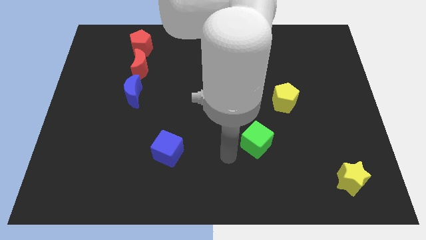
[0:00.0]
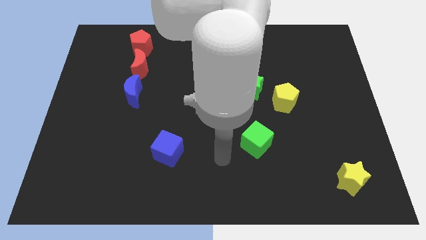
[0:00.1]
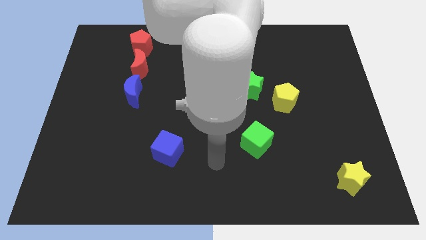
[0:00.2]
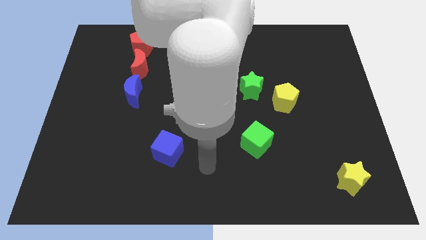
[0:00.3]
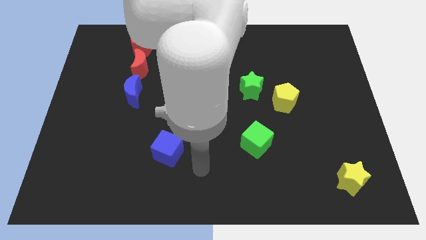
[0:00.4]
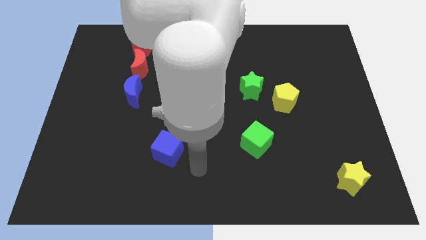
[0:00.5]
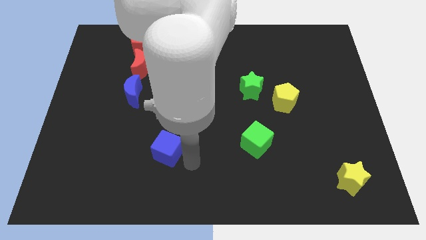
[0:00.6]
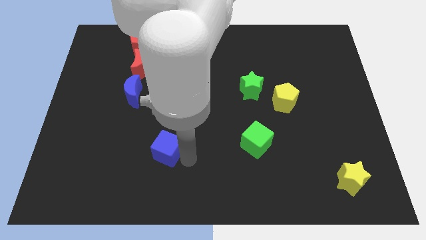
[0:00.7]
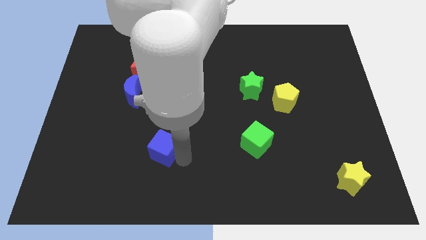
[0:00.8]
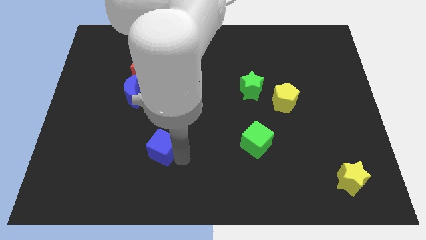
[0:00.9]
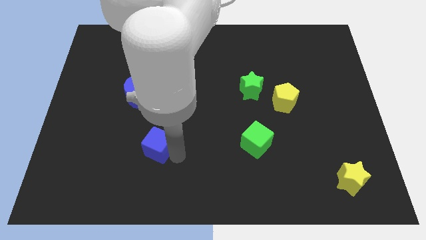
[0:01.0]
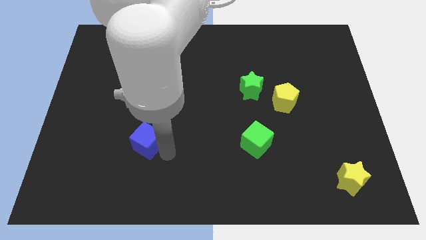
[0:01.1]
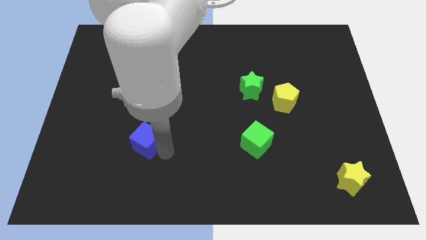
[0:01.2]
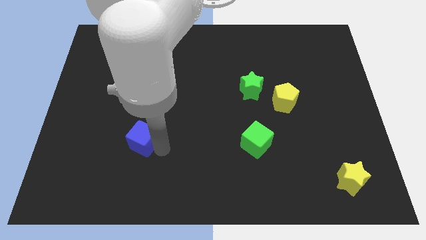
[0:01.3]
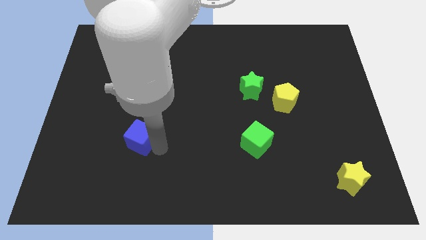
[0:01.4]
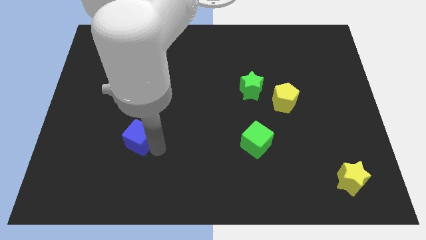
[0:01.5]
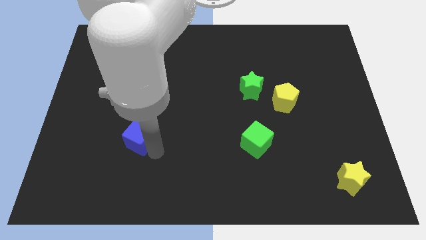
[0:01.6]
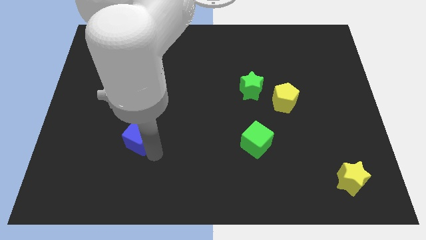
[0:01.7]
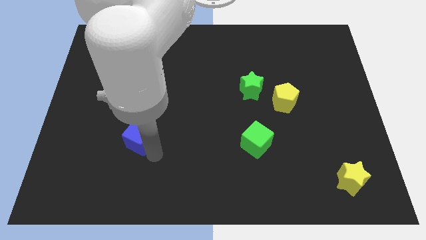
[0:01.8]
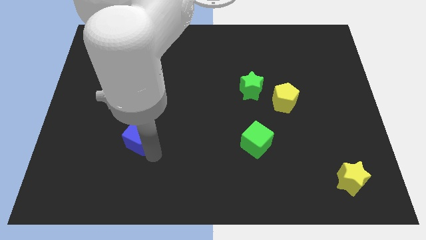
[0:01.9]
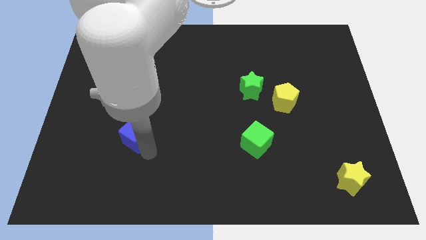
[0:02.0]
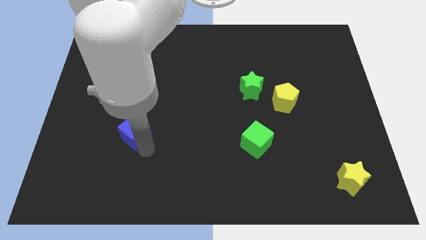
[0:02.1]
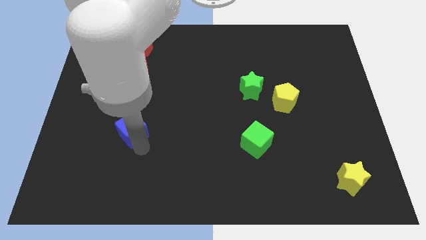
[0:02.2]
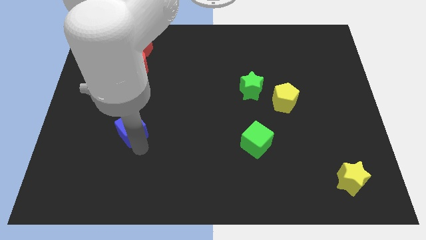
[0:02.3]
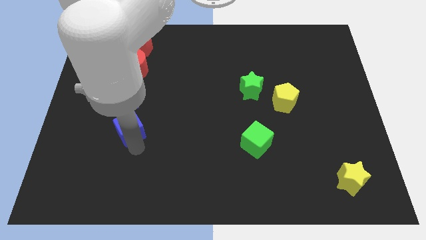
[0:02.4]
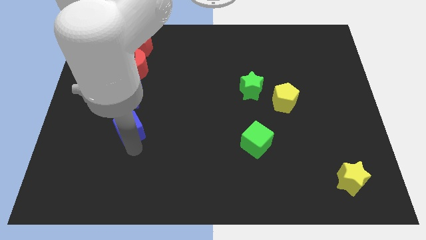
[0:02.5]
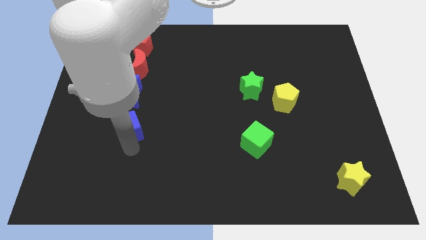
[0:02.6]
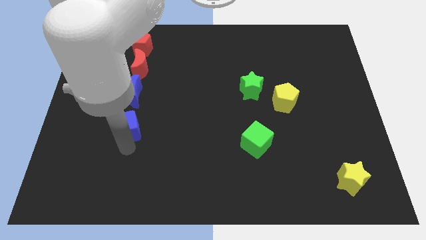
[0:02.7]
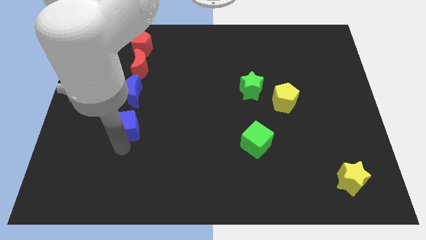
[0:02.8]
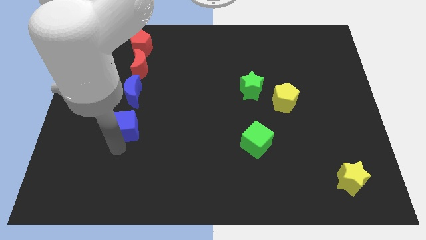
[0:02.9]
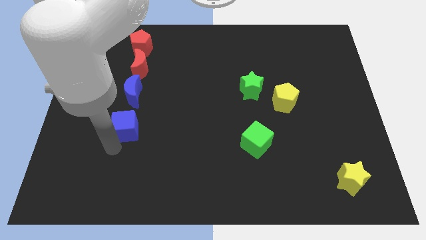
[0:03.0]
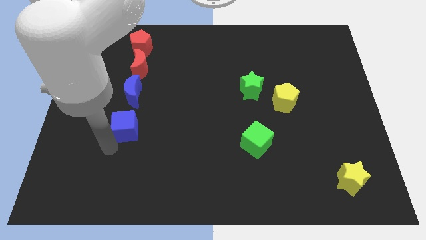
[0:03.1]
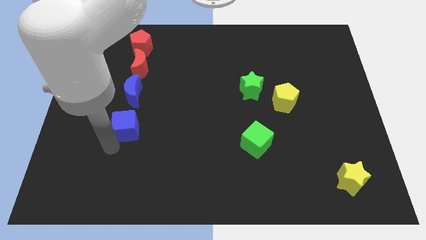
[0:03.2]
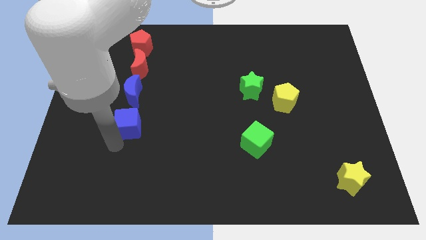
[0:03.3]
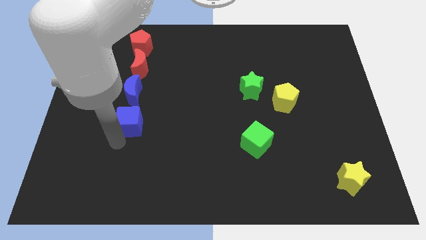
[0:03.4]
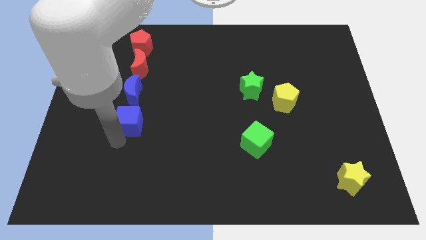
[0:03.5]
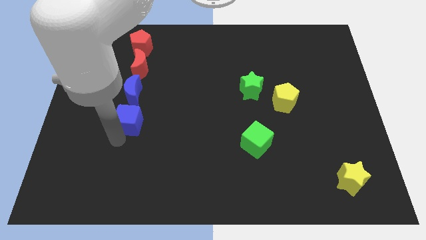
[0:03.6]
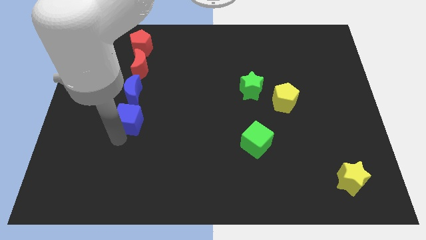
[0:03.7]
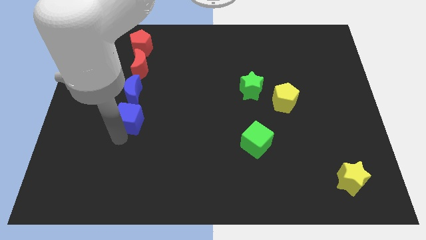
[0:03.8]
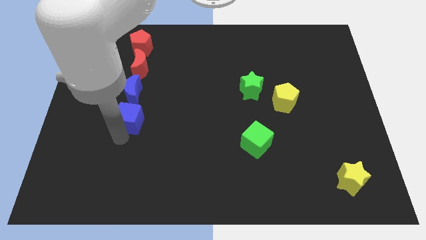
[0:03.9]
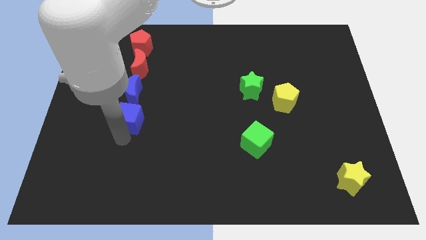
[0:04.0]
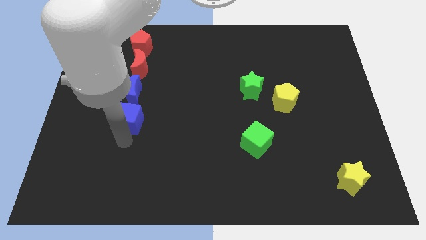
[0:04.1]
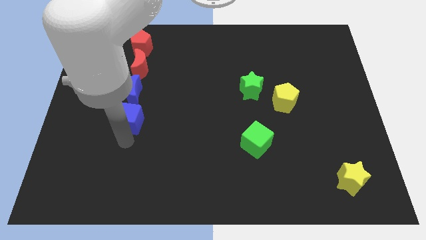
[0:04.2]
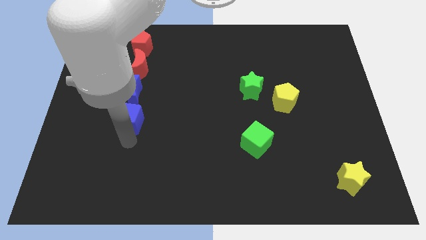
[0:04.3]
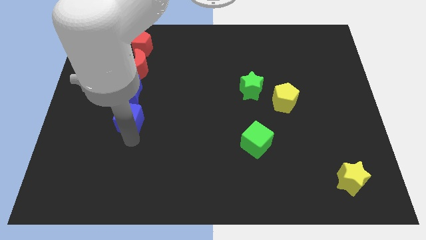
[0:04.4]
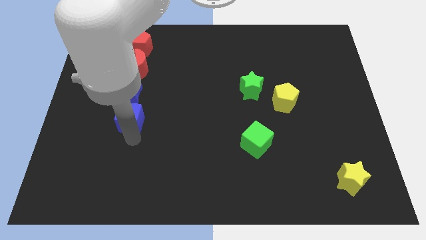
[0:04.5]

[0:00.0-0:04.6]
place the blue cube below the blue moon

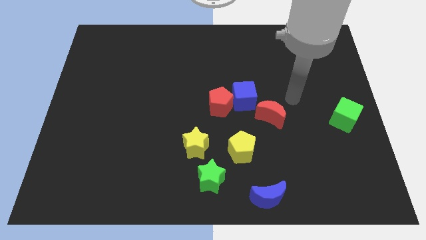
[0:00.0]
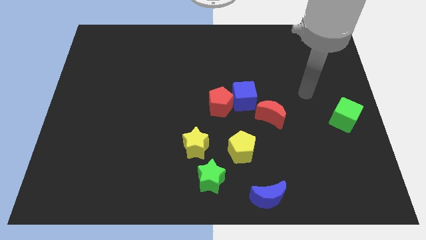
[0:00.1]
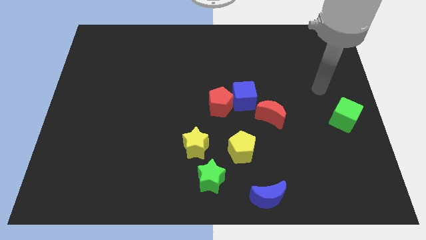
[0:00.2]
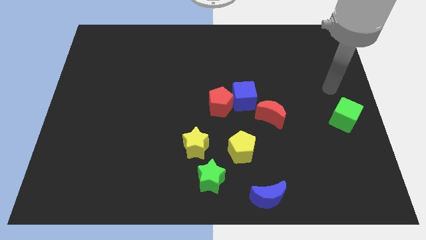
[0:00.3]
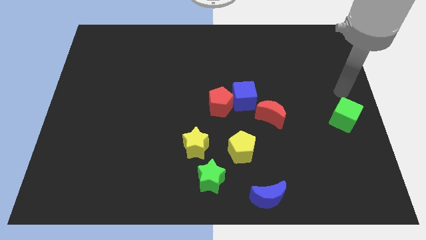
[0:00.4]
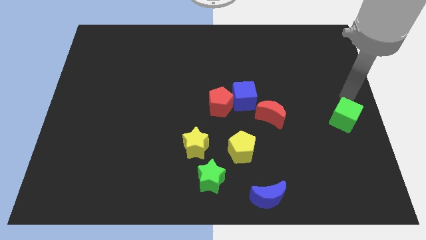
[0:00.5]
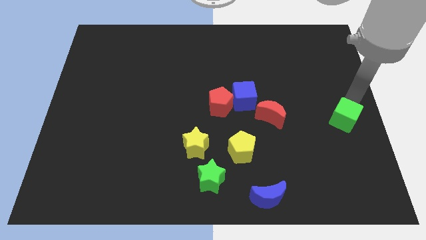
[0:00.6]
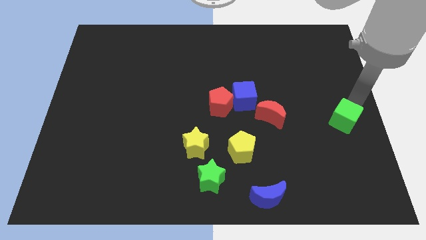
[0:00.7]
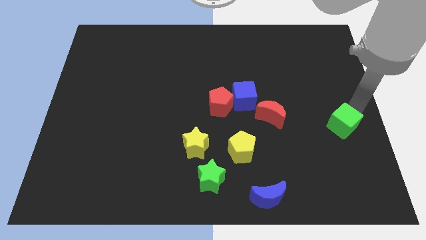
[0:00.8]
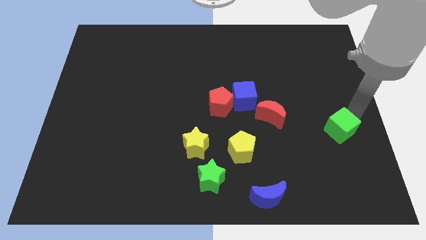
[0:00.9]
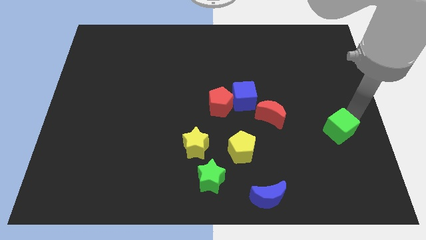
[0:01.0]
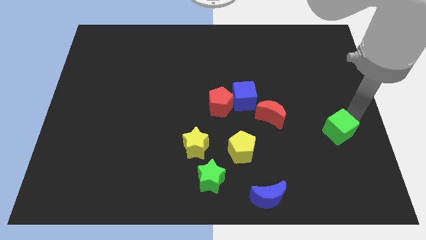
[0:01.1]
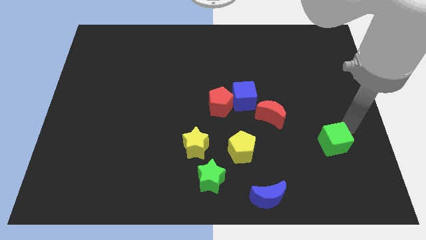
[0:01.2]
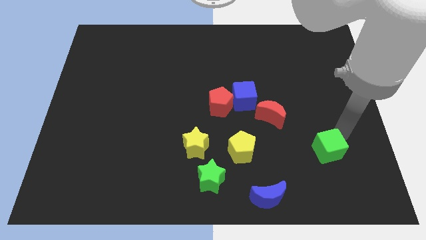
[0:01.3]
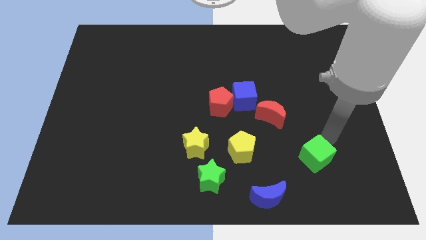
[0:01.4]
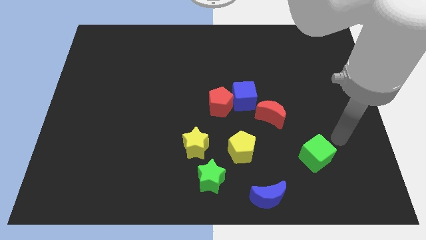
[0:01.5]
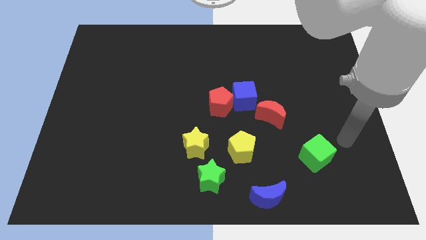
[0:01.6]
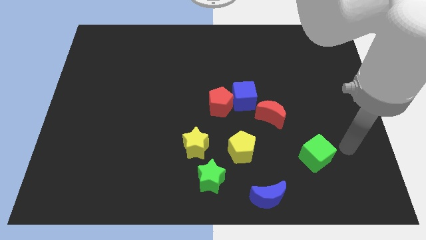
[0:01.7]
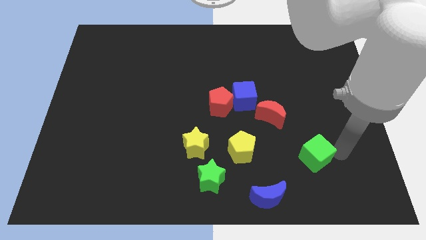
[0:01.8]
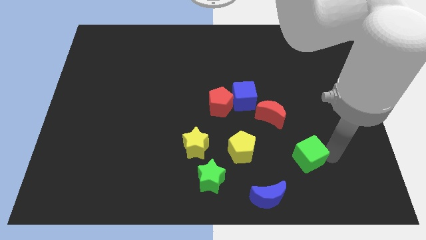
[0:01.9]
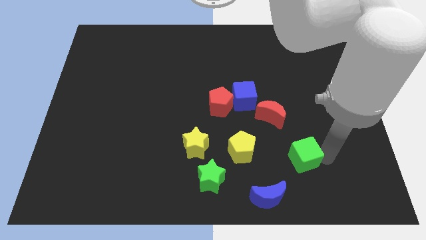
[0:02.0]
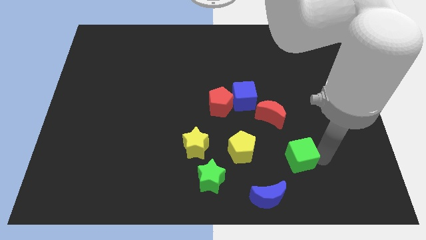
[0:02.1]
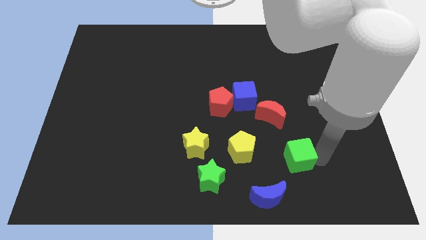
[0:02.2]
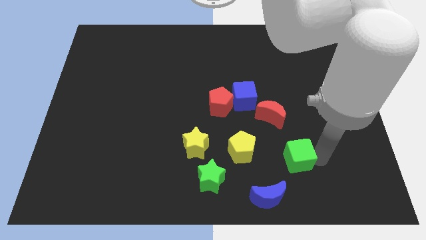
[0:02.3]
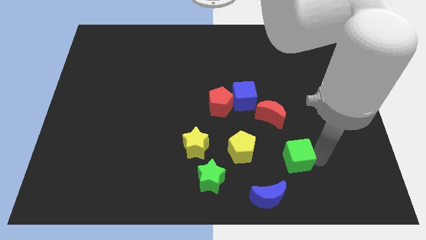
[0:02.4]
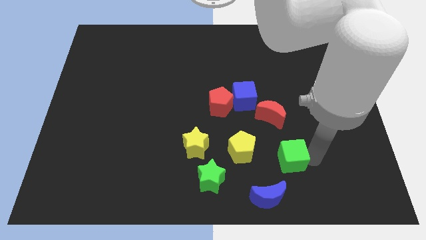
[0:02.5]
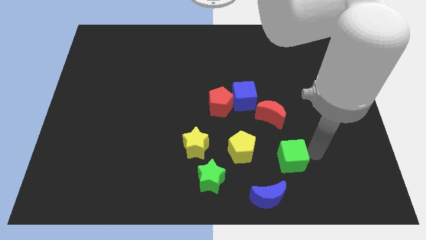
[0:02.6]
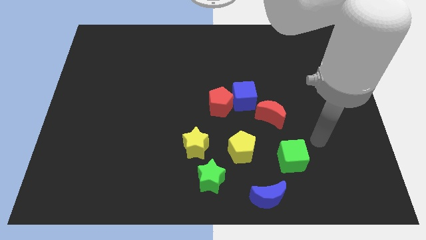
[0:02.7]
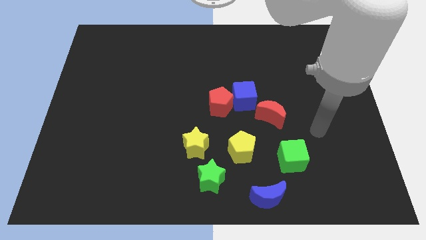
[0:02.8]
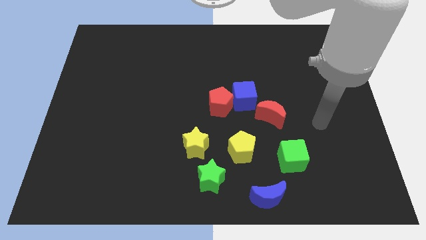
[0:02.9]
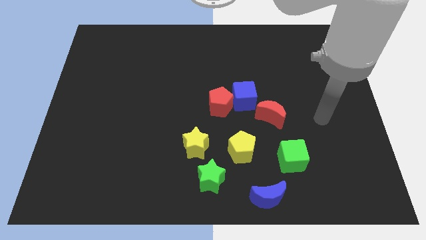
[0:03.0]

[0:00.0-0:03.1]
place the green cube right to the yellow pentagon

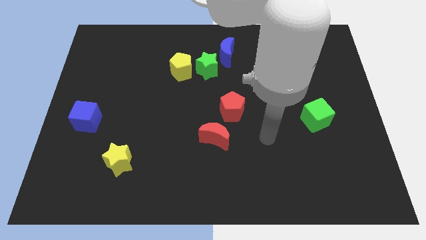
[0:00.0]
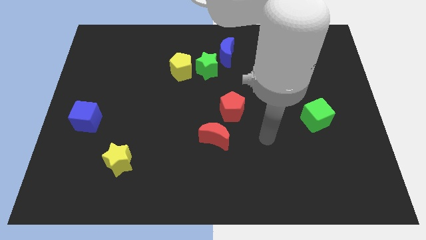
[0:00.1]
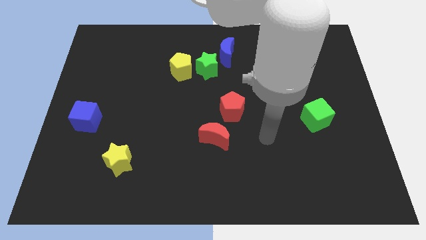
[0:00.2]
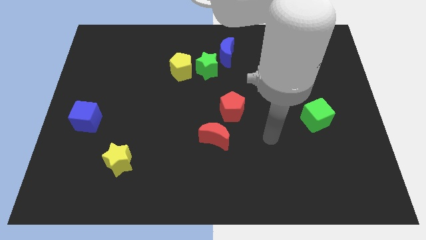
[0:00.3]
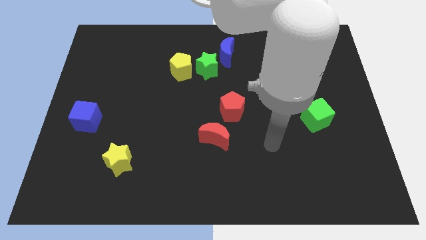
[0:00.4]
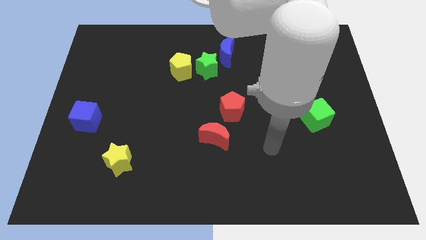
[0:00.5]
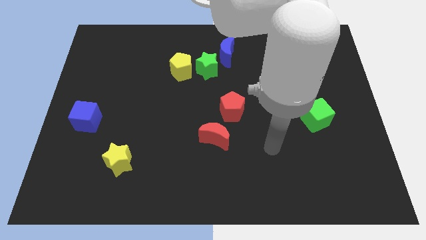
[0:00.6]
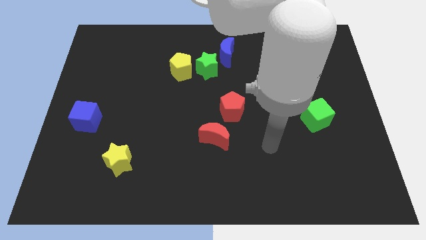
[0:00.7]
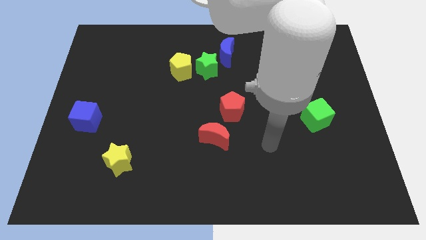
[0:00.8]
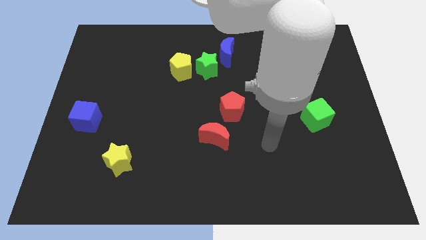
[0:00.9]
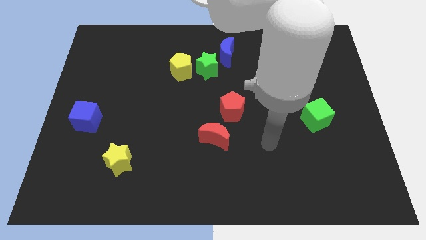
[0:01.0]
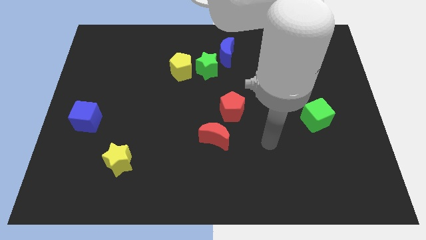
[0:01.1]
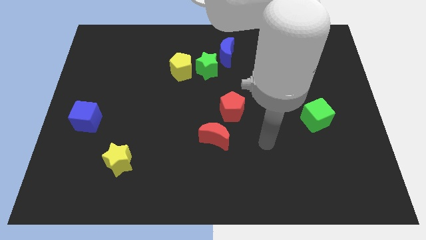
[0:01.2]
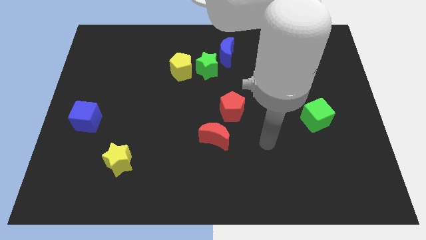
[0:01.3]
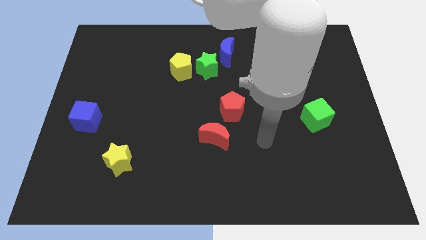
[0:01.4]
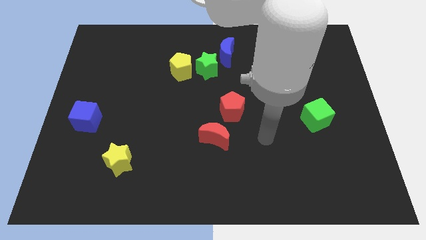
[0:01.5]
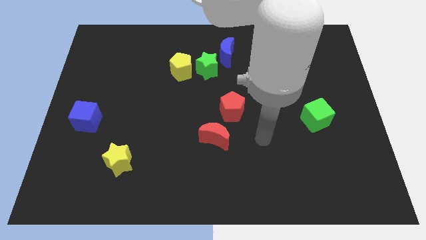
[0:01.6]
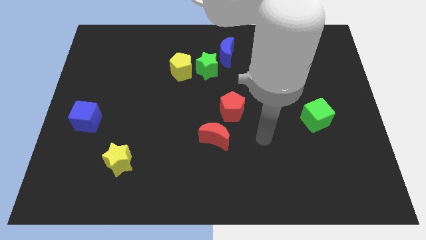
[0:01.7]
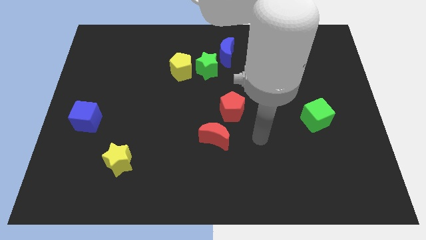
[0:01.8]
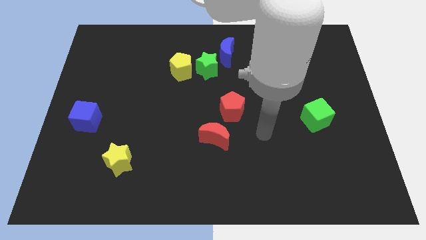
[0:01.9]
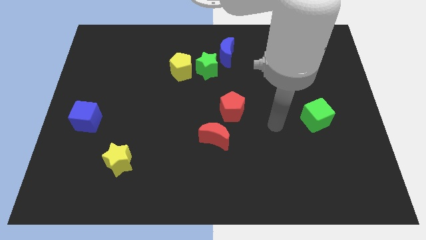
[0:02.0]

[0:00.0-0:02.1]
place your arm to the left side of the green cube
